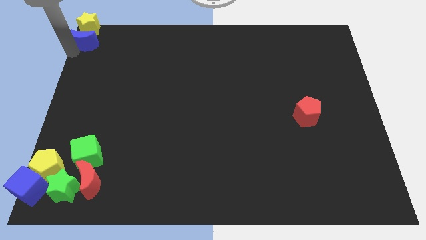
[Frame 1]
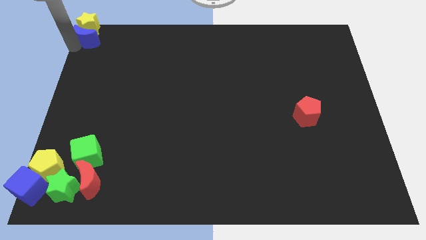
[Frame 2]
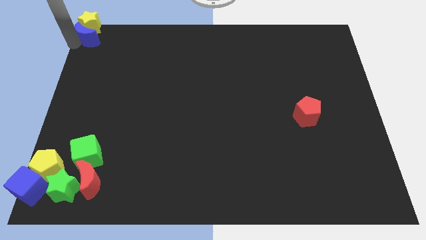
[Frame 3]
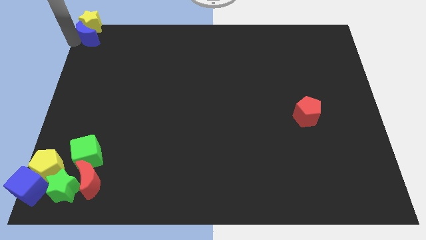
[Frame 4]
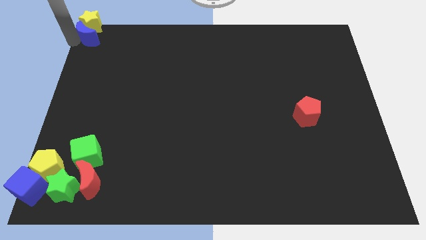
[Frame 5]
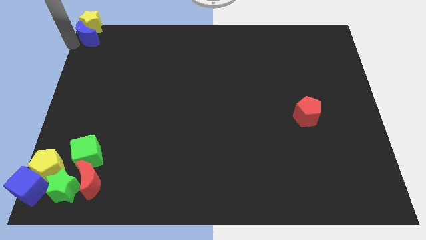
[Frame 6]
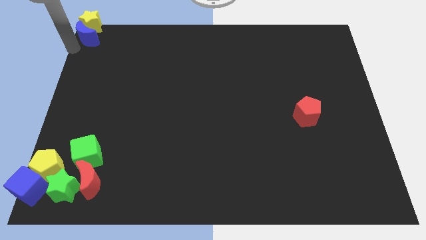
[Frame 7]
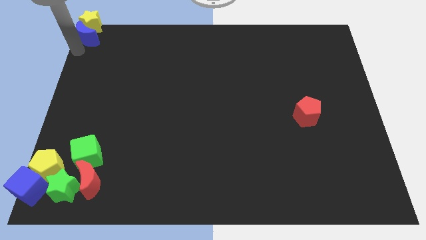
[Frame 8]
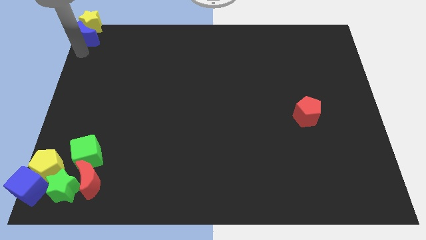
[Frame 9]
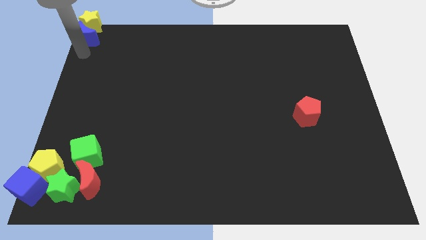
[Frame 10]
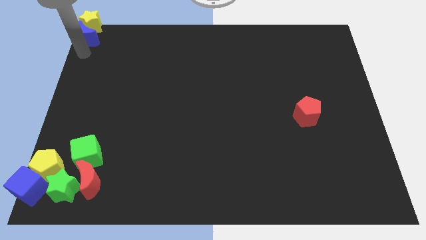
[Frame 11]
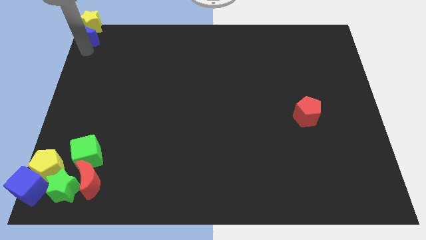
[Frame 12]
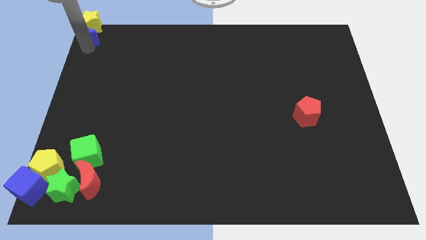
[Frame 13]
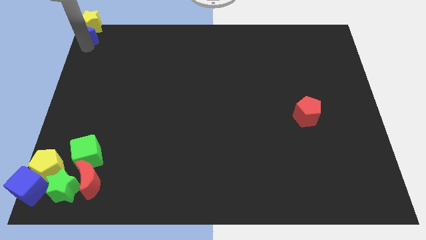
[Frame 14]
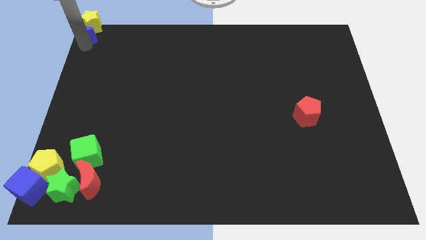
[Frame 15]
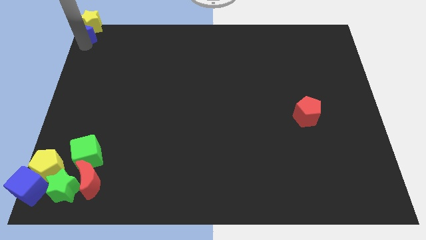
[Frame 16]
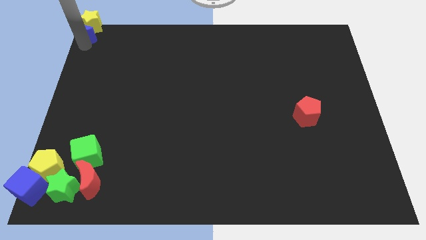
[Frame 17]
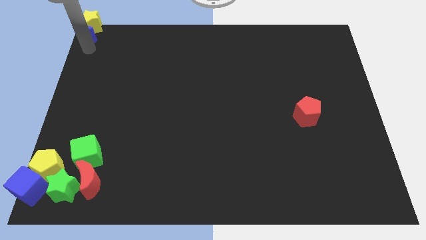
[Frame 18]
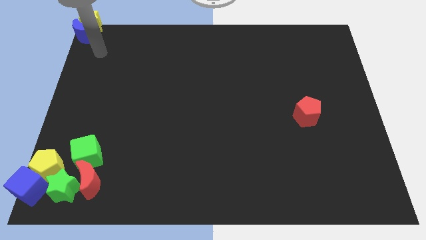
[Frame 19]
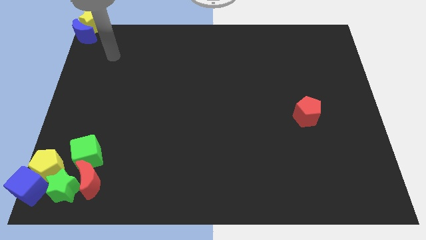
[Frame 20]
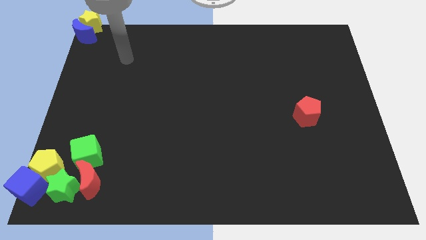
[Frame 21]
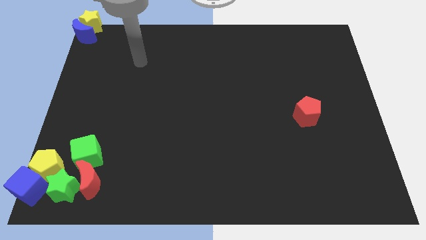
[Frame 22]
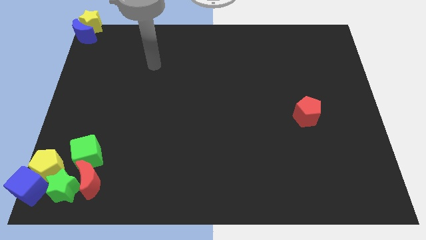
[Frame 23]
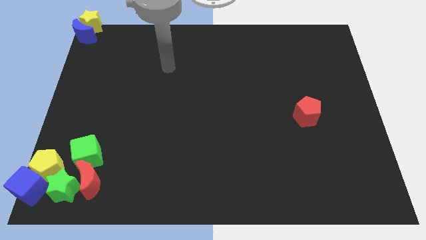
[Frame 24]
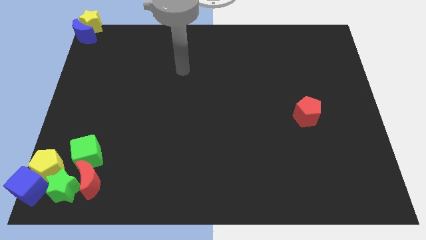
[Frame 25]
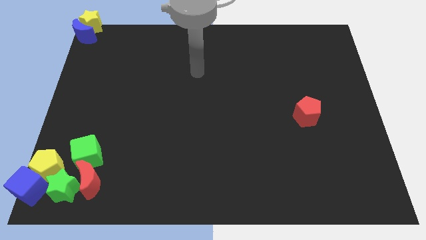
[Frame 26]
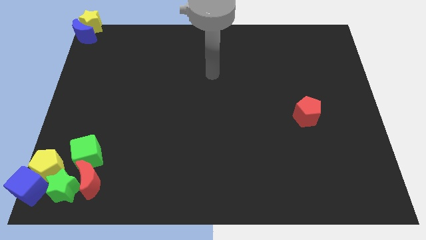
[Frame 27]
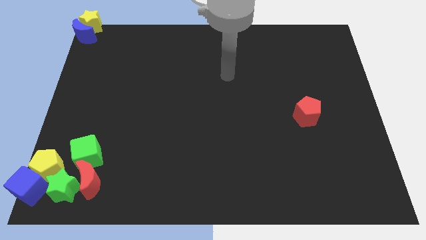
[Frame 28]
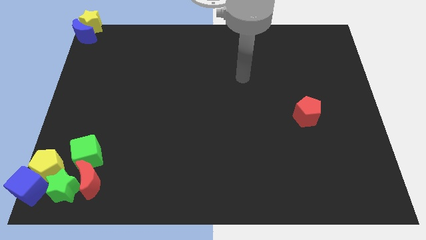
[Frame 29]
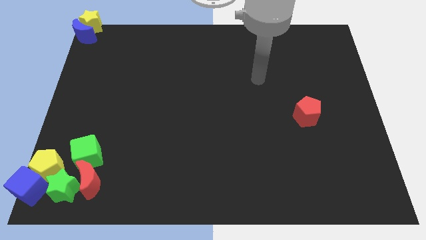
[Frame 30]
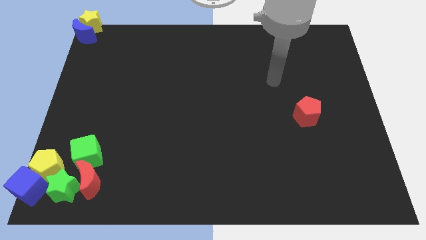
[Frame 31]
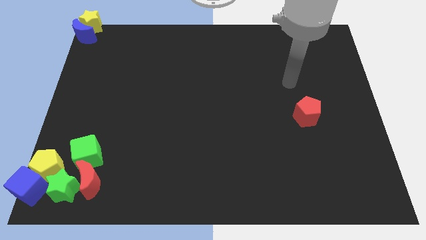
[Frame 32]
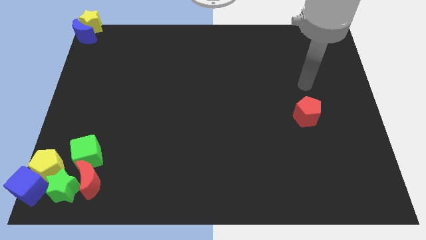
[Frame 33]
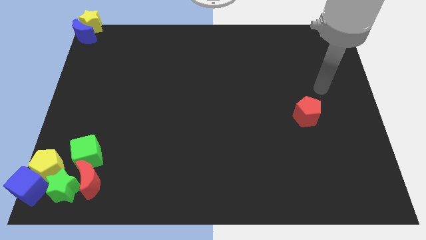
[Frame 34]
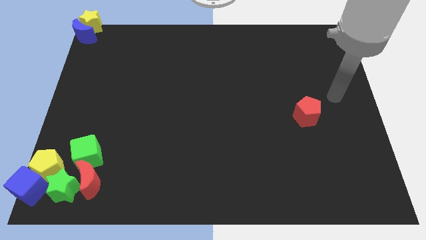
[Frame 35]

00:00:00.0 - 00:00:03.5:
push the yellow star with the blue moon towards the top left corner of the board

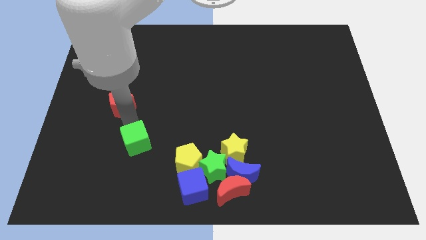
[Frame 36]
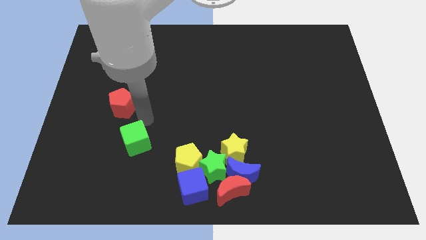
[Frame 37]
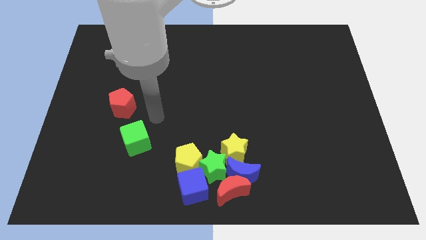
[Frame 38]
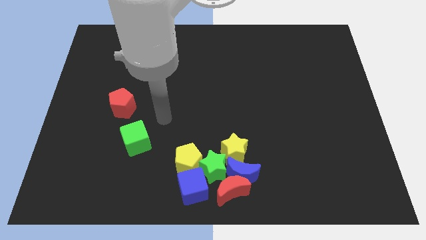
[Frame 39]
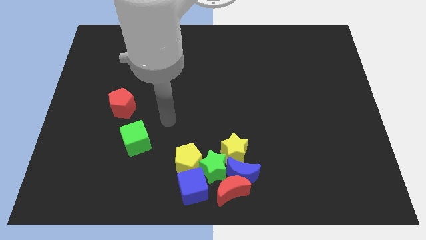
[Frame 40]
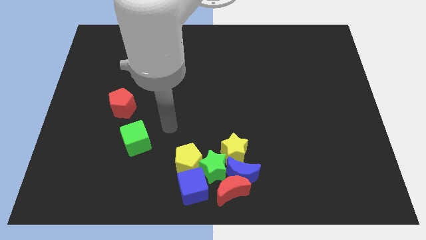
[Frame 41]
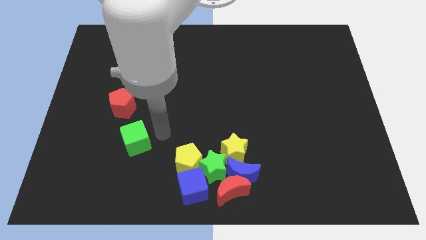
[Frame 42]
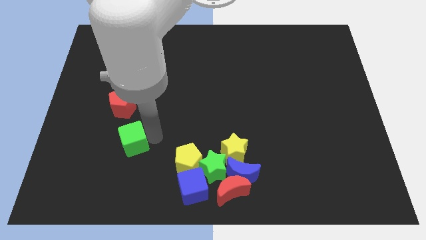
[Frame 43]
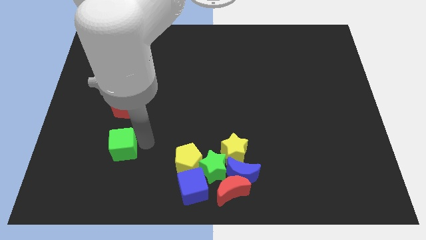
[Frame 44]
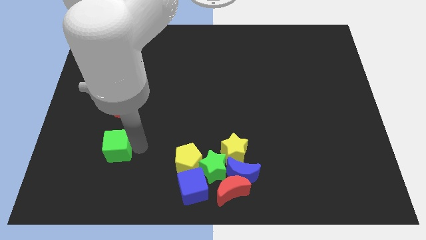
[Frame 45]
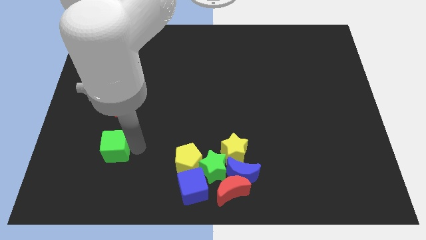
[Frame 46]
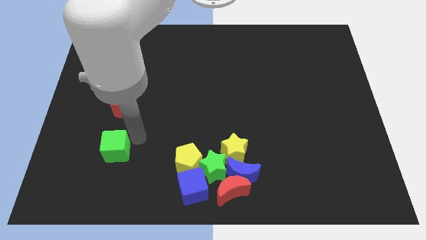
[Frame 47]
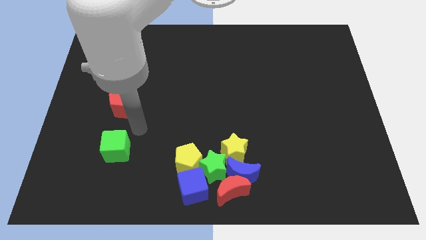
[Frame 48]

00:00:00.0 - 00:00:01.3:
place the green cube down to the red pentagon

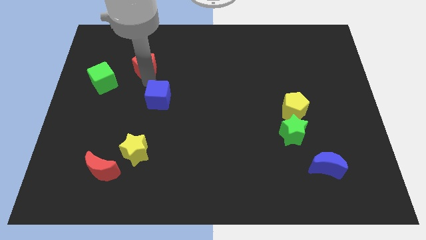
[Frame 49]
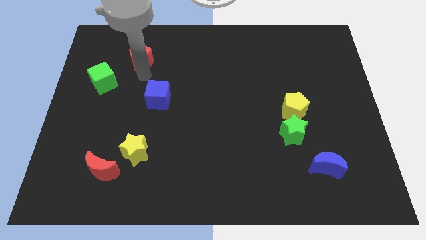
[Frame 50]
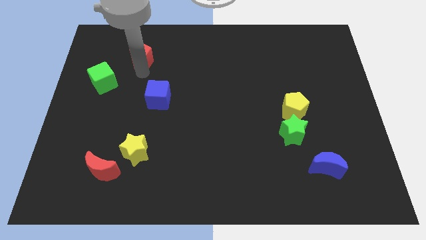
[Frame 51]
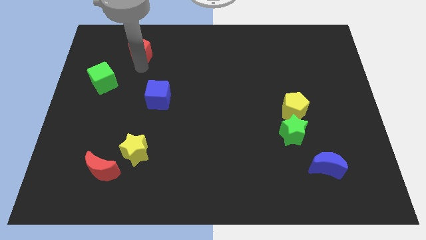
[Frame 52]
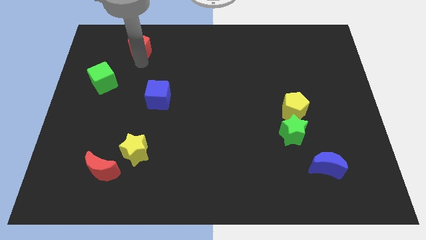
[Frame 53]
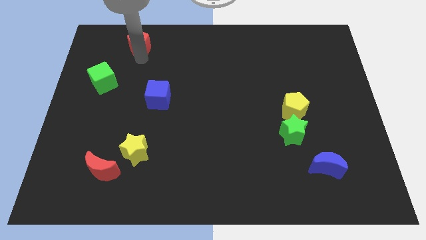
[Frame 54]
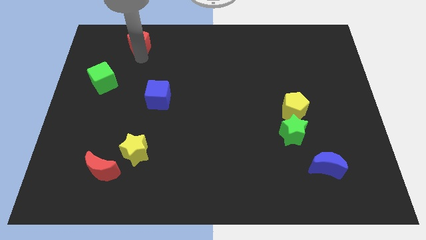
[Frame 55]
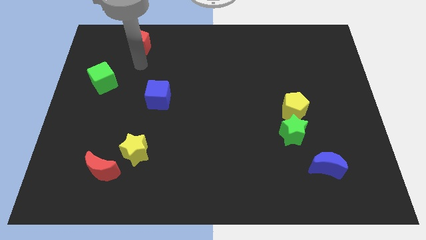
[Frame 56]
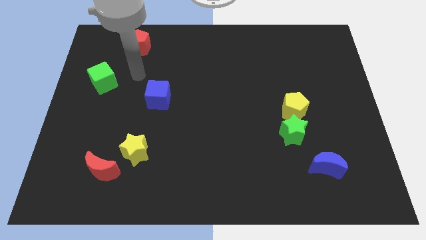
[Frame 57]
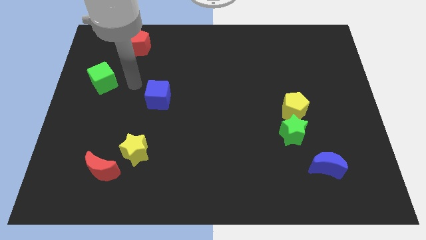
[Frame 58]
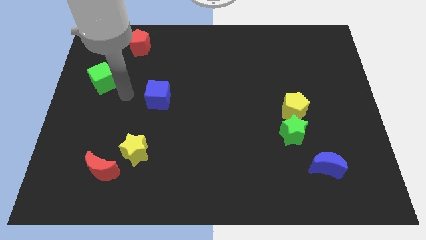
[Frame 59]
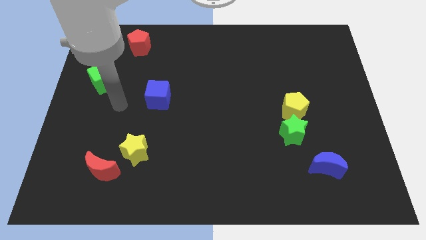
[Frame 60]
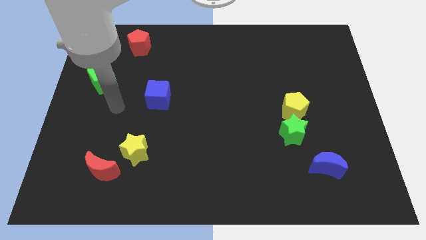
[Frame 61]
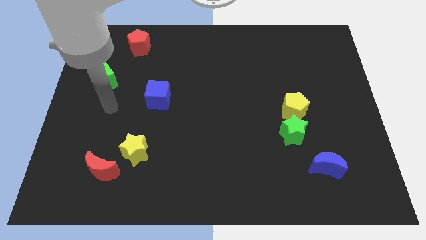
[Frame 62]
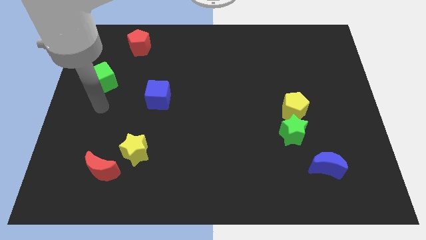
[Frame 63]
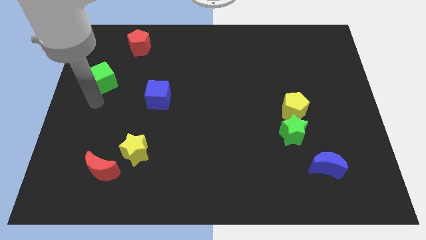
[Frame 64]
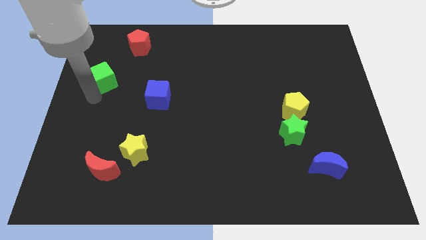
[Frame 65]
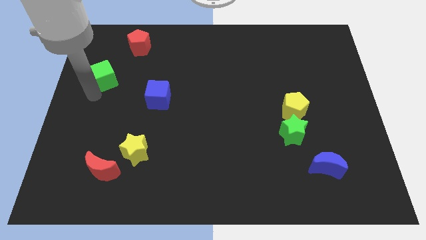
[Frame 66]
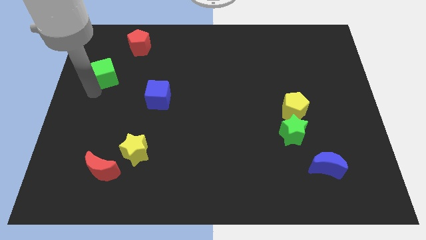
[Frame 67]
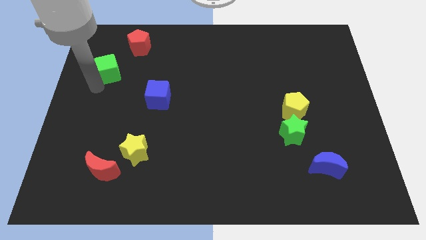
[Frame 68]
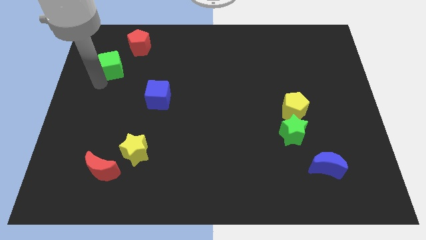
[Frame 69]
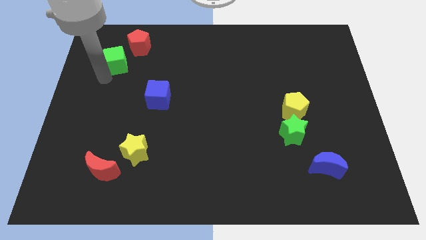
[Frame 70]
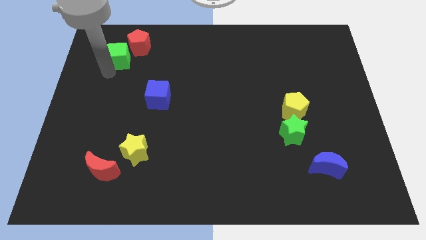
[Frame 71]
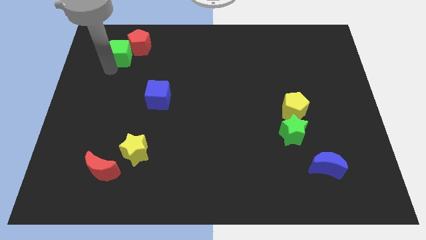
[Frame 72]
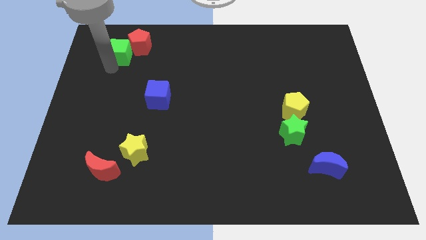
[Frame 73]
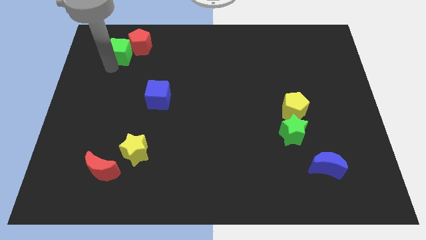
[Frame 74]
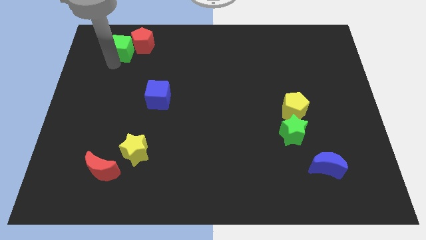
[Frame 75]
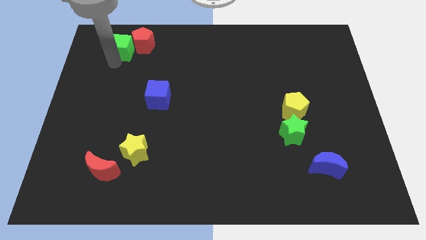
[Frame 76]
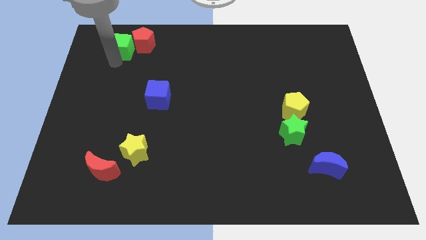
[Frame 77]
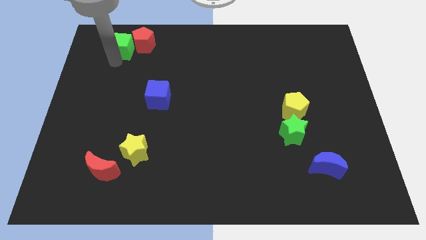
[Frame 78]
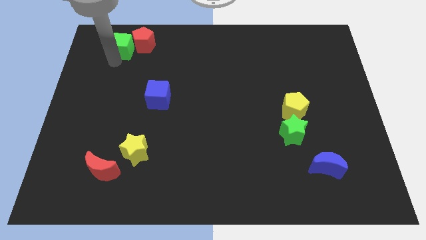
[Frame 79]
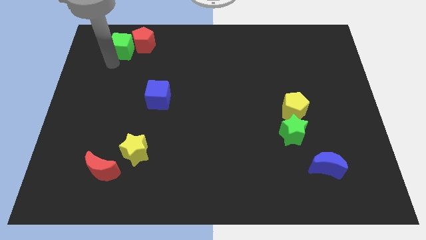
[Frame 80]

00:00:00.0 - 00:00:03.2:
push the red pentagon and green cube at the top left of the table

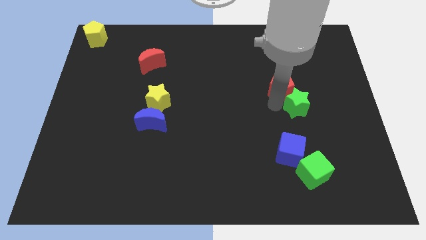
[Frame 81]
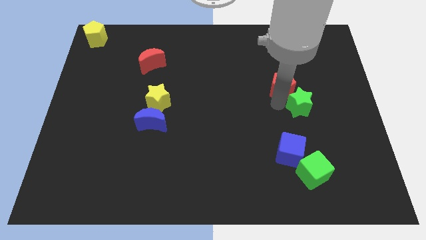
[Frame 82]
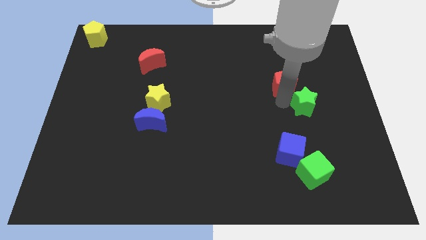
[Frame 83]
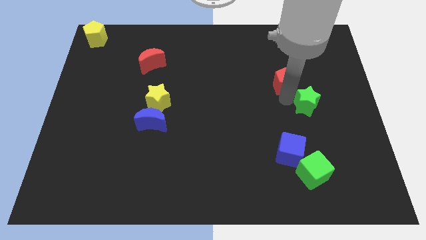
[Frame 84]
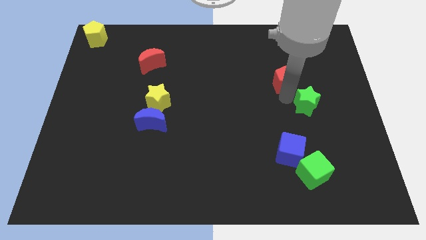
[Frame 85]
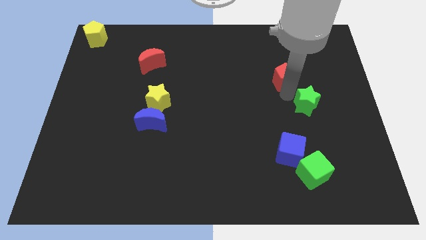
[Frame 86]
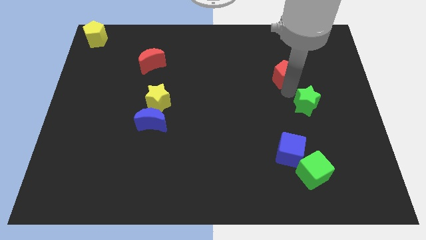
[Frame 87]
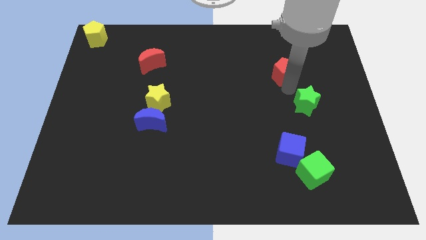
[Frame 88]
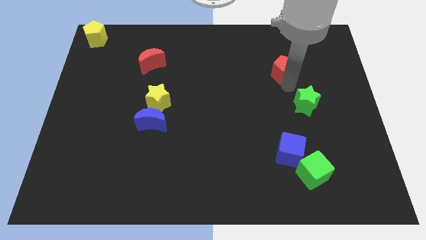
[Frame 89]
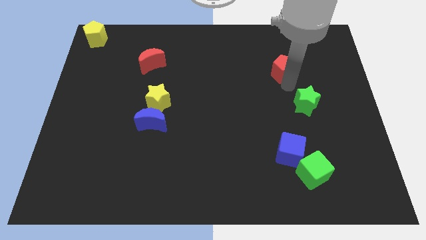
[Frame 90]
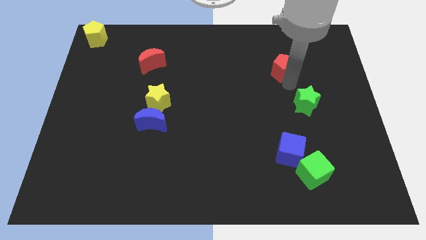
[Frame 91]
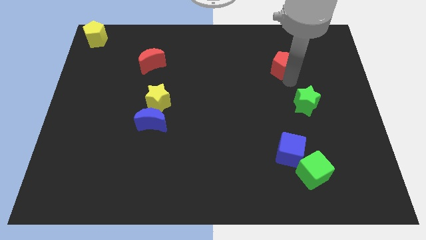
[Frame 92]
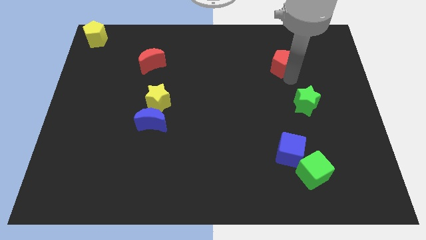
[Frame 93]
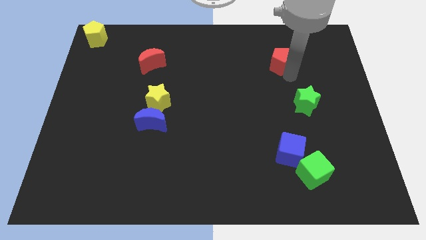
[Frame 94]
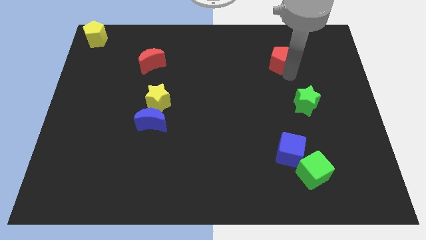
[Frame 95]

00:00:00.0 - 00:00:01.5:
separate the red pentagon from the green star
